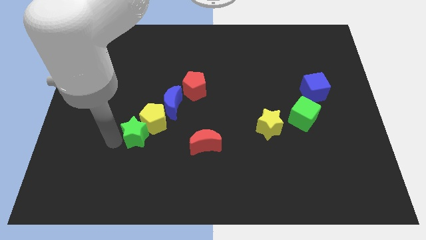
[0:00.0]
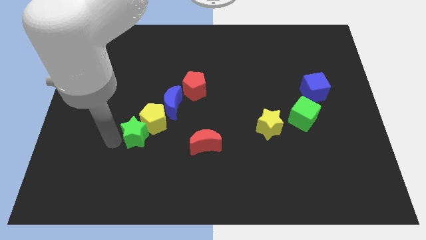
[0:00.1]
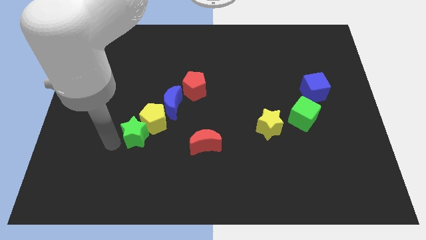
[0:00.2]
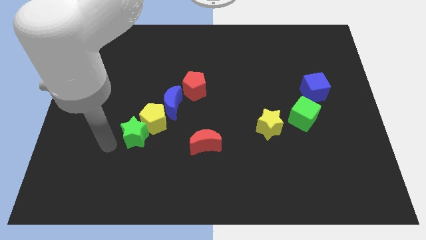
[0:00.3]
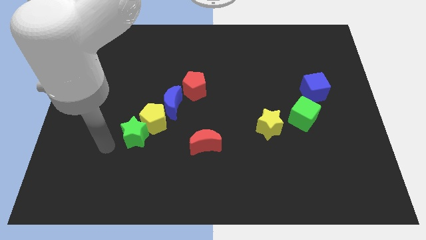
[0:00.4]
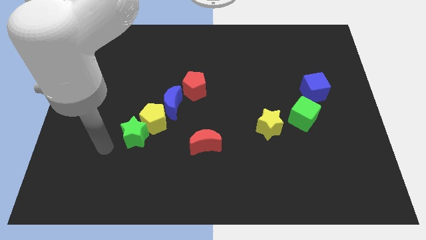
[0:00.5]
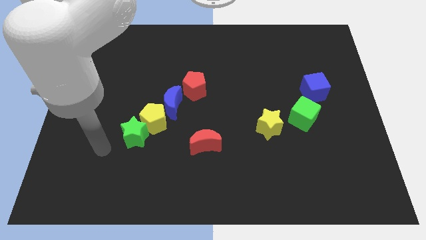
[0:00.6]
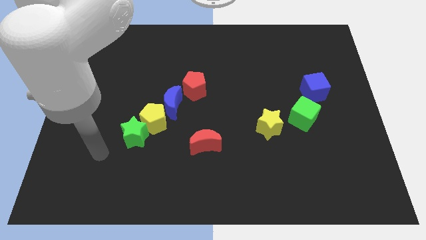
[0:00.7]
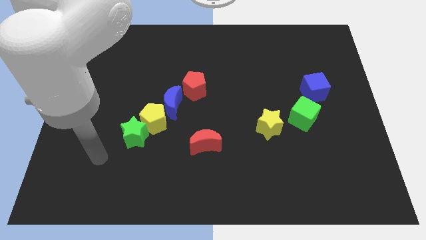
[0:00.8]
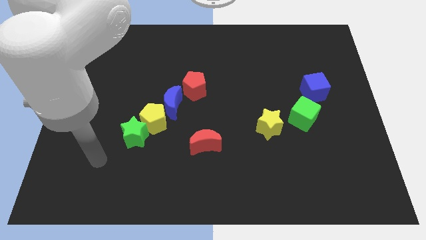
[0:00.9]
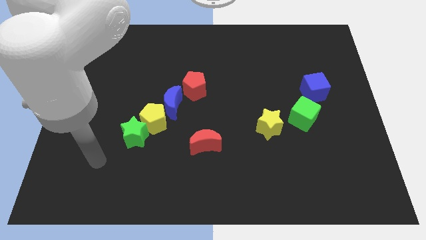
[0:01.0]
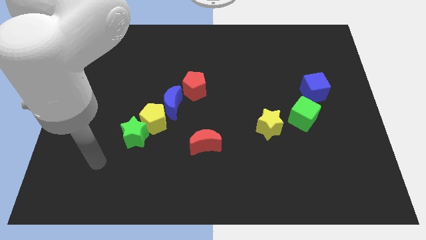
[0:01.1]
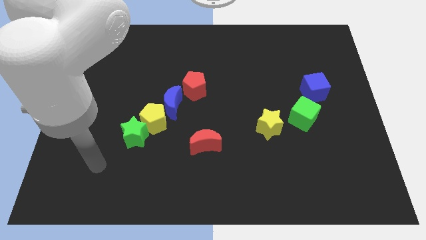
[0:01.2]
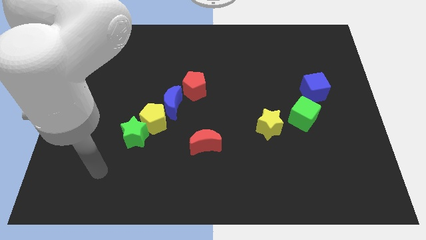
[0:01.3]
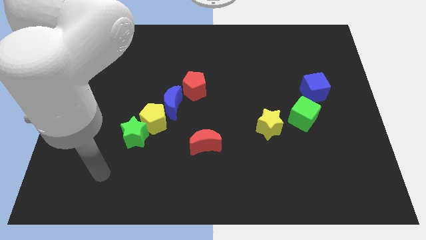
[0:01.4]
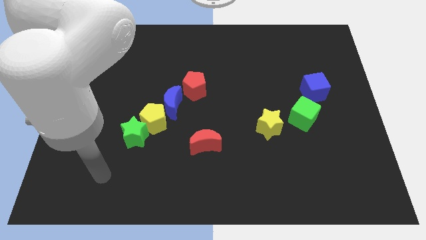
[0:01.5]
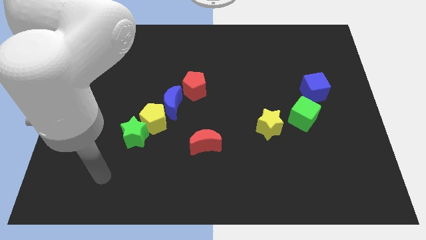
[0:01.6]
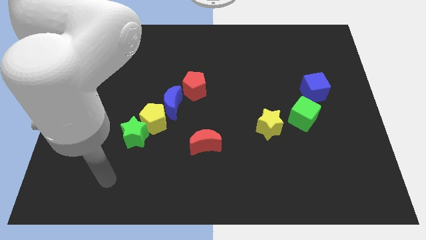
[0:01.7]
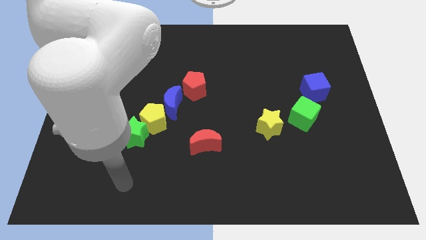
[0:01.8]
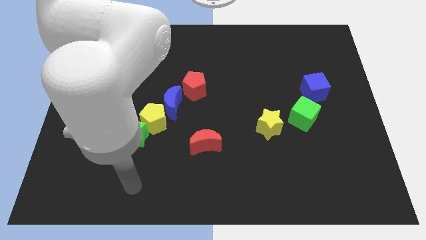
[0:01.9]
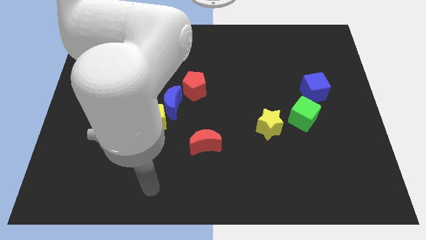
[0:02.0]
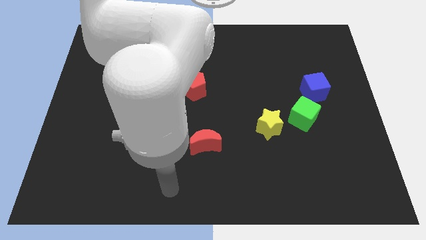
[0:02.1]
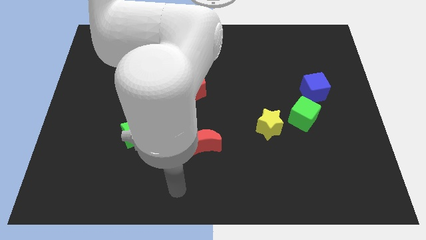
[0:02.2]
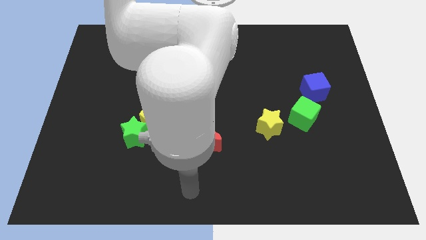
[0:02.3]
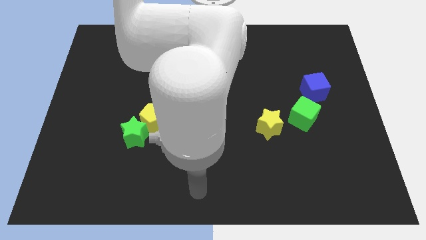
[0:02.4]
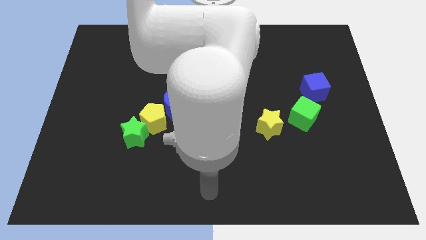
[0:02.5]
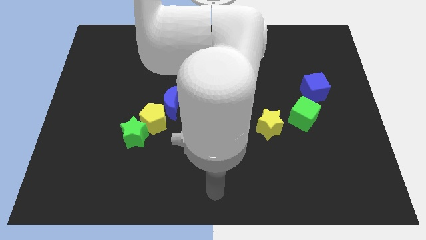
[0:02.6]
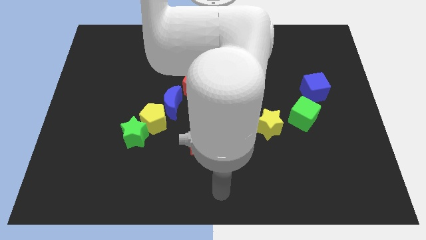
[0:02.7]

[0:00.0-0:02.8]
point your arm at the bottom center of the board

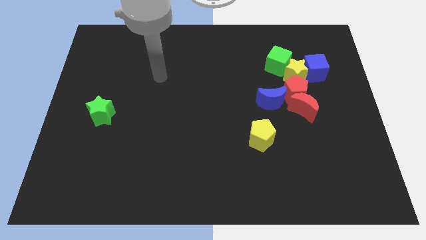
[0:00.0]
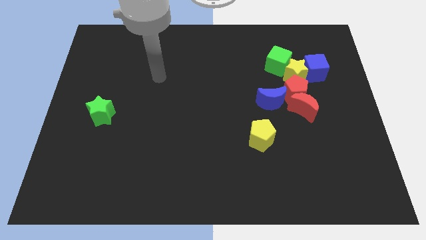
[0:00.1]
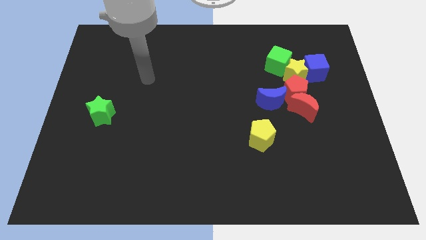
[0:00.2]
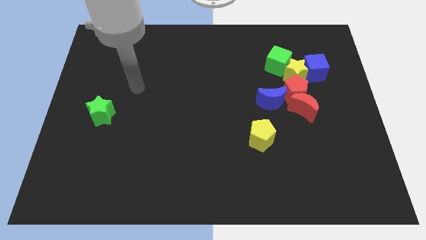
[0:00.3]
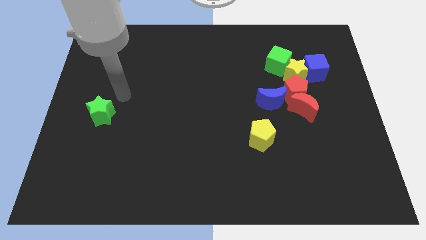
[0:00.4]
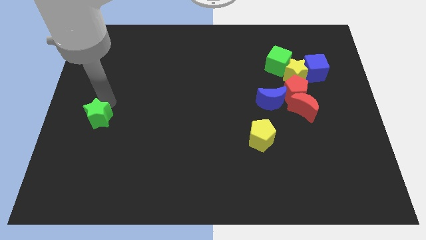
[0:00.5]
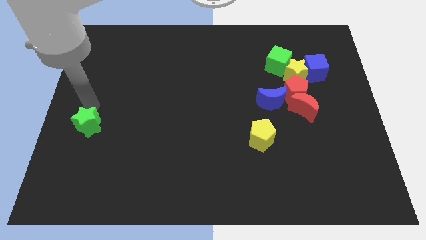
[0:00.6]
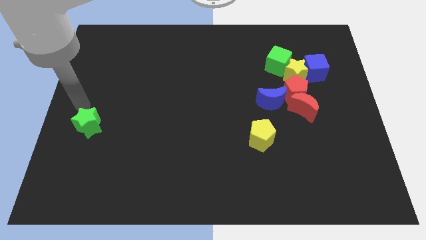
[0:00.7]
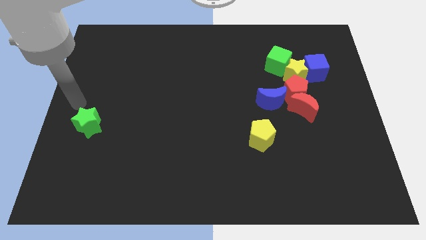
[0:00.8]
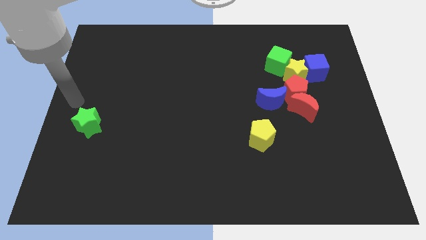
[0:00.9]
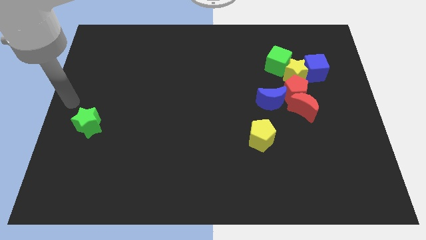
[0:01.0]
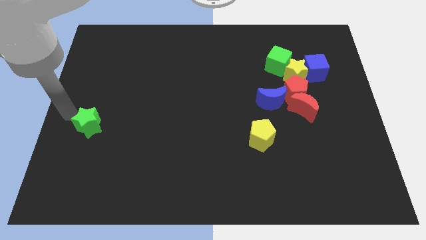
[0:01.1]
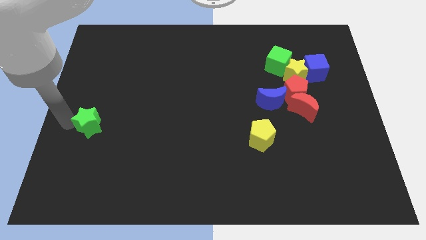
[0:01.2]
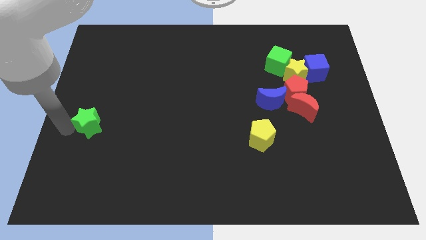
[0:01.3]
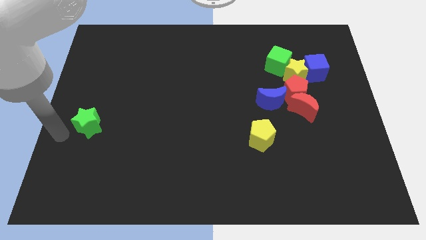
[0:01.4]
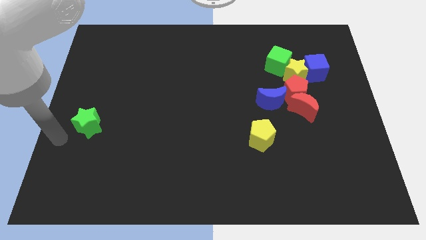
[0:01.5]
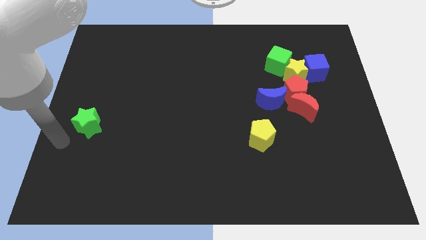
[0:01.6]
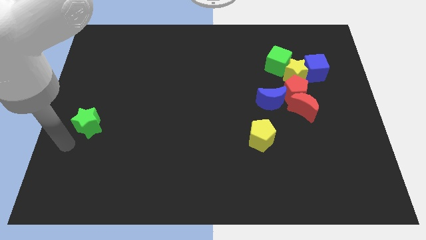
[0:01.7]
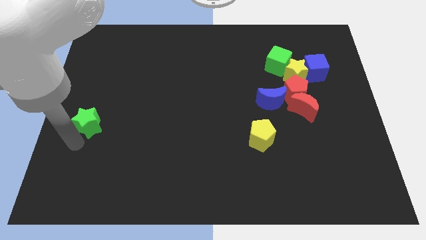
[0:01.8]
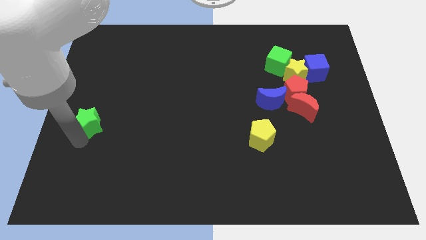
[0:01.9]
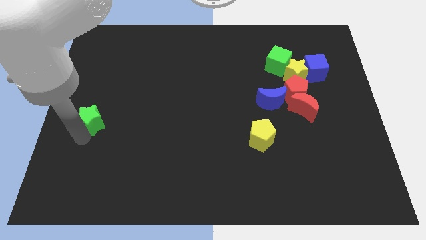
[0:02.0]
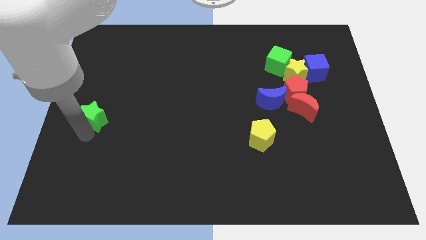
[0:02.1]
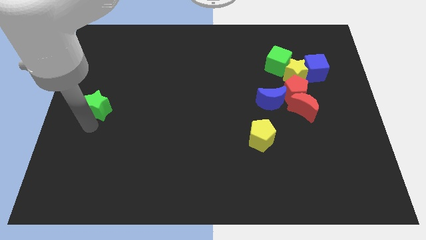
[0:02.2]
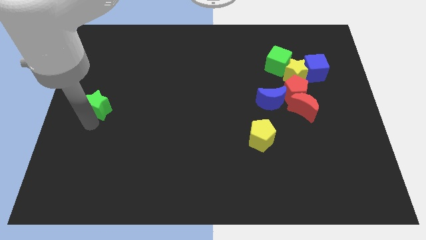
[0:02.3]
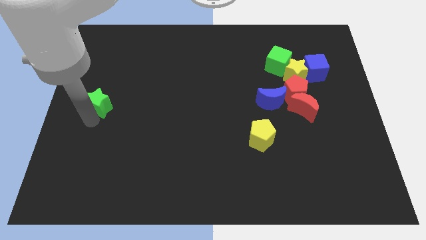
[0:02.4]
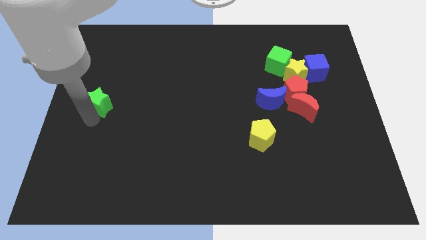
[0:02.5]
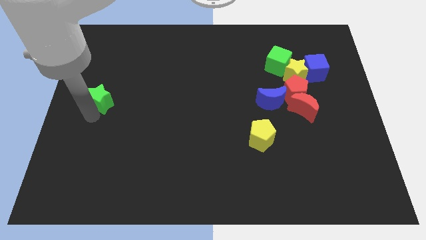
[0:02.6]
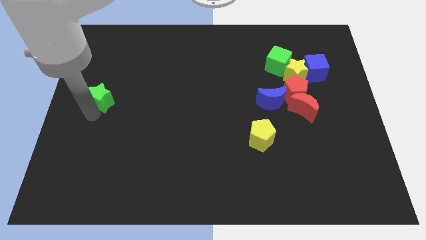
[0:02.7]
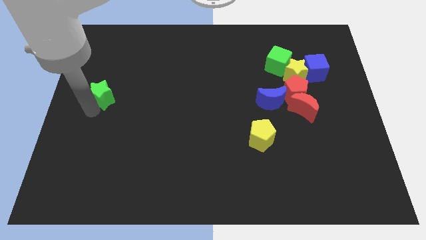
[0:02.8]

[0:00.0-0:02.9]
push the green star towards the top side

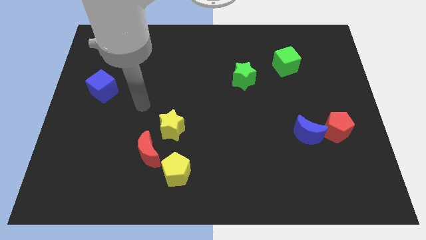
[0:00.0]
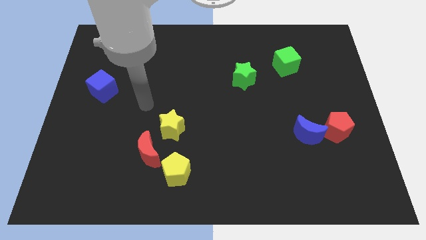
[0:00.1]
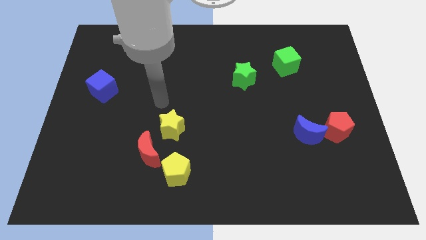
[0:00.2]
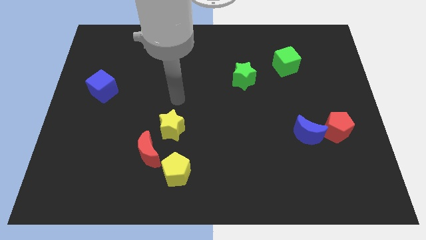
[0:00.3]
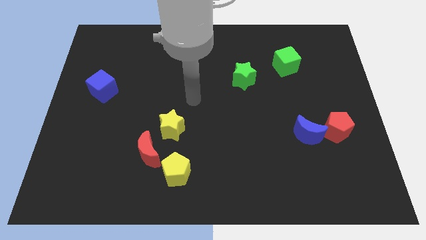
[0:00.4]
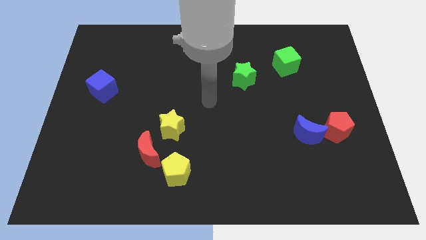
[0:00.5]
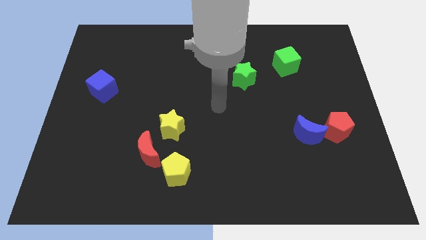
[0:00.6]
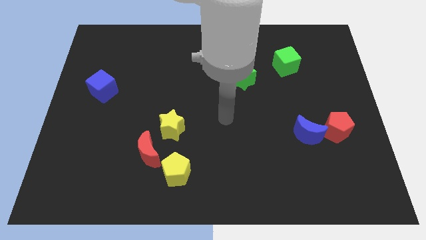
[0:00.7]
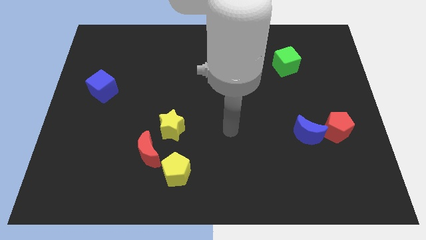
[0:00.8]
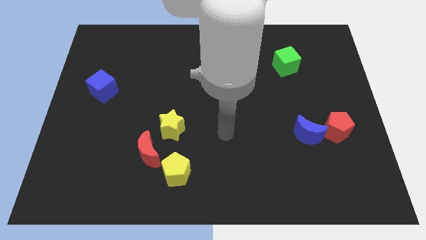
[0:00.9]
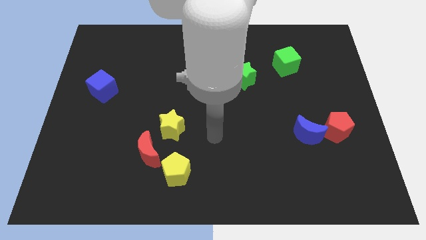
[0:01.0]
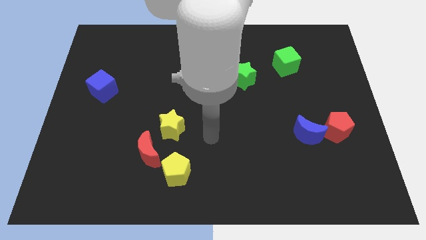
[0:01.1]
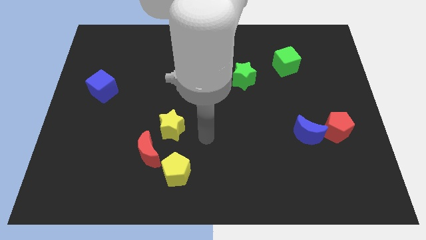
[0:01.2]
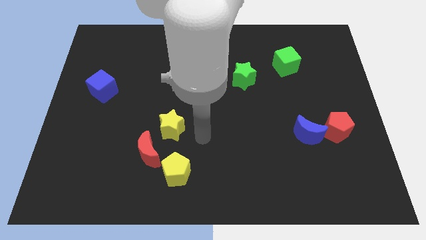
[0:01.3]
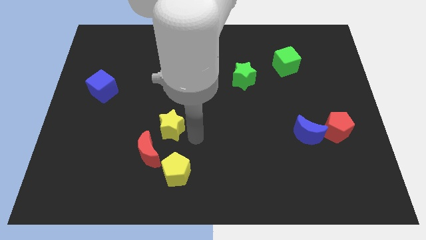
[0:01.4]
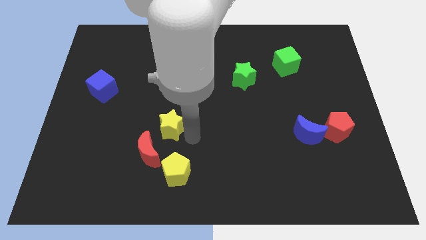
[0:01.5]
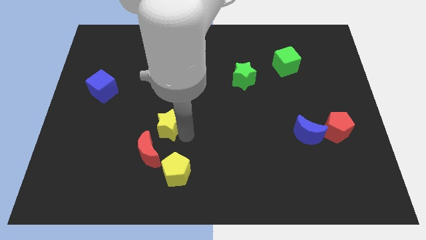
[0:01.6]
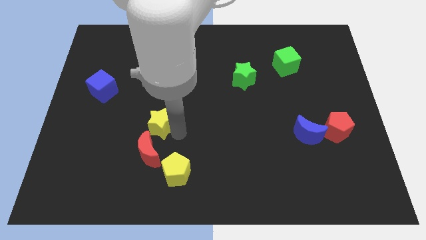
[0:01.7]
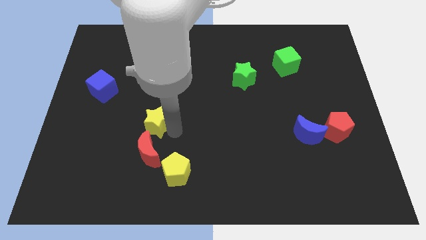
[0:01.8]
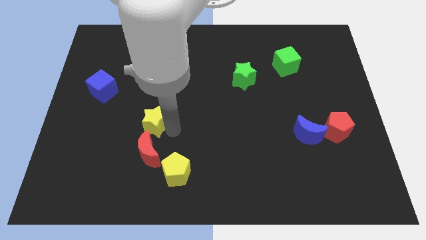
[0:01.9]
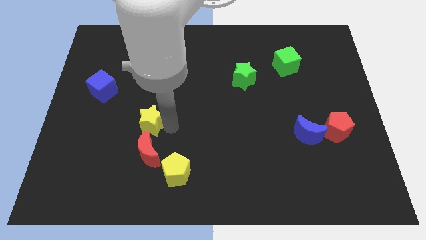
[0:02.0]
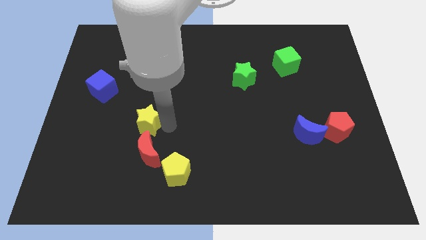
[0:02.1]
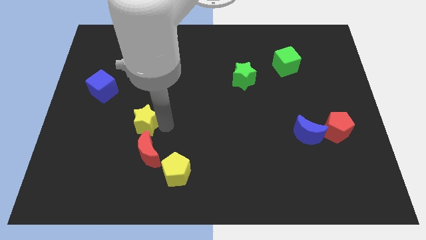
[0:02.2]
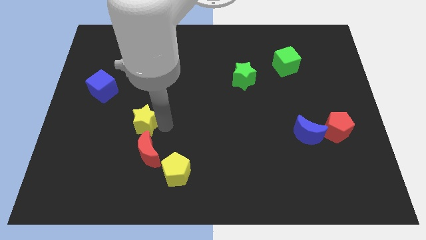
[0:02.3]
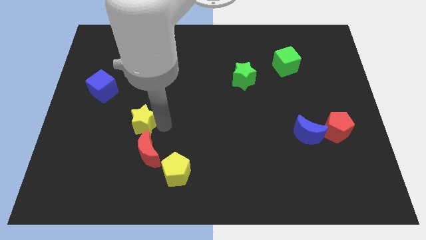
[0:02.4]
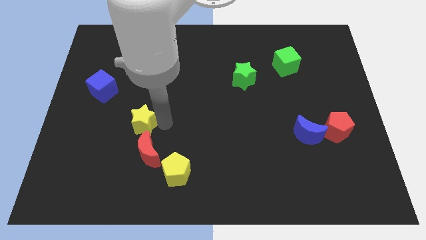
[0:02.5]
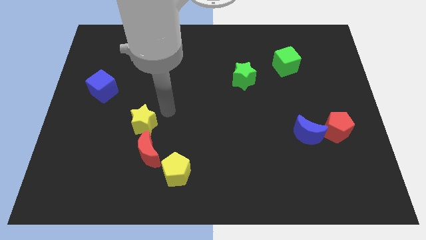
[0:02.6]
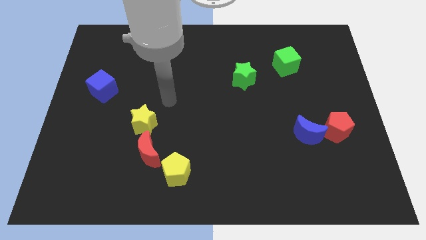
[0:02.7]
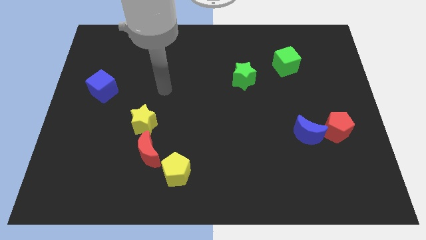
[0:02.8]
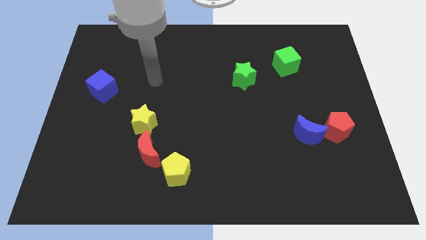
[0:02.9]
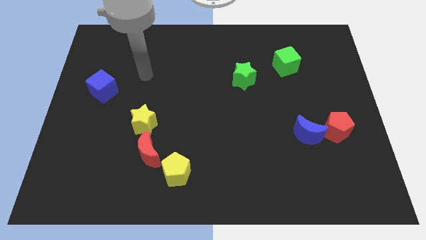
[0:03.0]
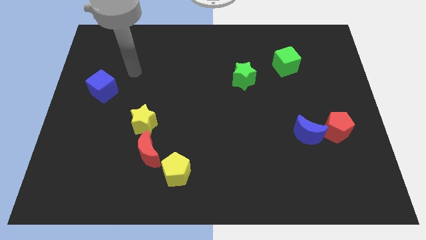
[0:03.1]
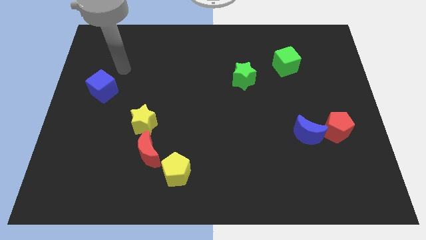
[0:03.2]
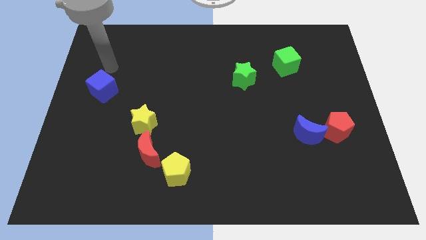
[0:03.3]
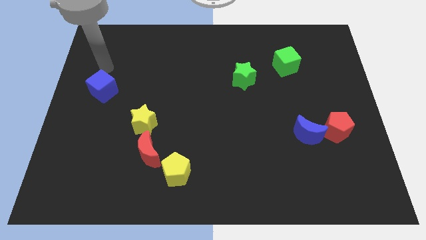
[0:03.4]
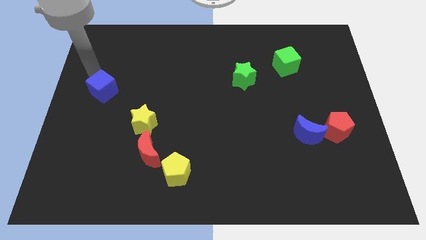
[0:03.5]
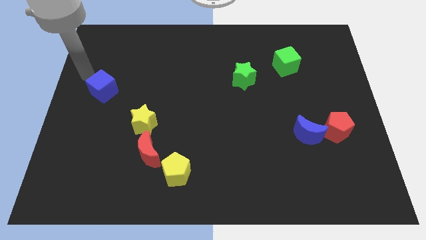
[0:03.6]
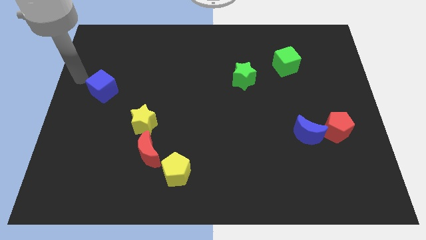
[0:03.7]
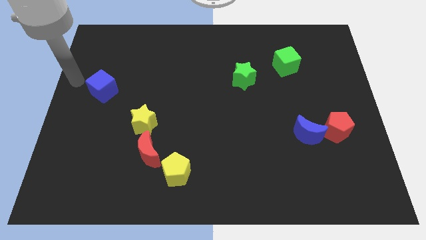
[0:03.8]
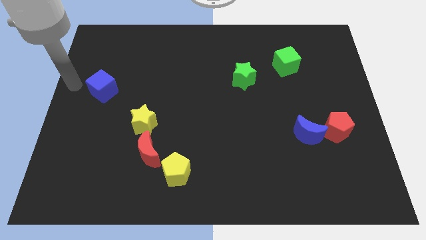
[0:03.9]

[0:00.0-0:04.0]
place the yellow star towards the top left side of the red crescent
